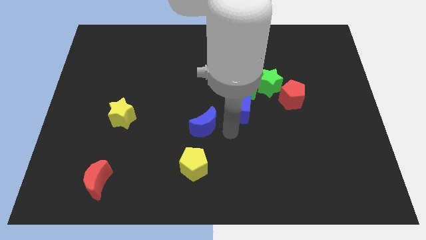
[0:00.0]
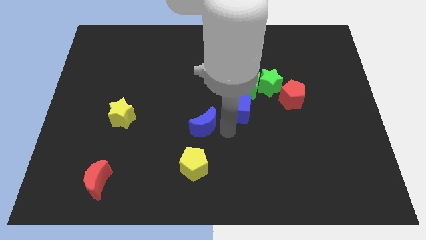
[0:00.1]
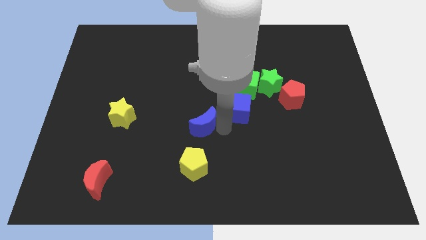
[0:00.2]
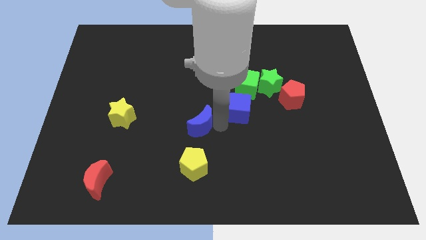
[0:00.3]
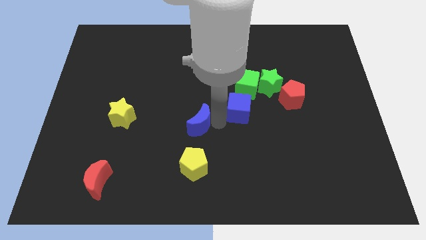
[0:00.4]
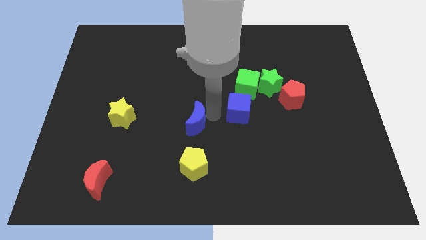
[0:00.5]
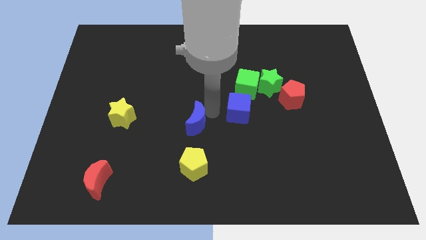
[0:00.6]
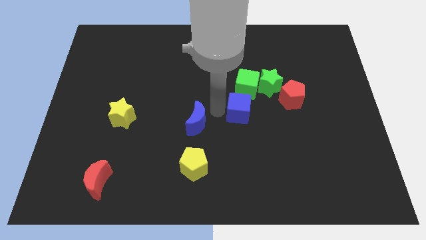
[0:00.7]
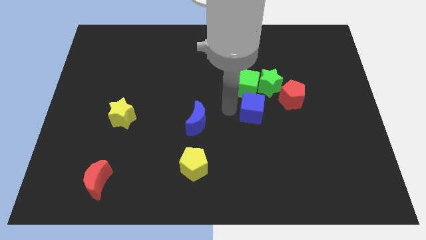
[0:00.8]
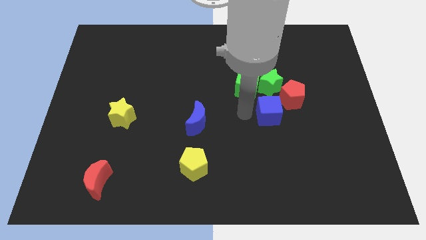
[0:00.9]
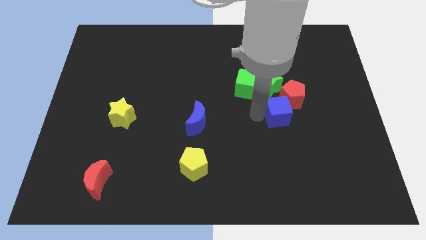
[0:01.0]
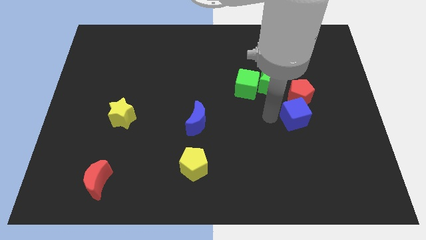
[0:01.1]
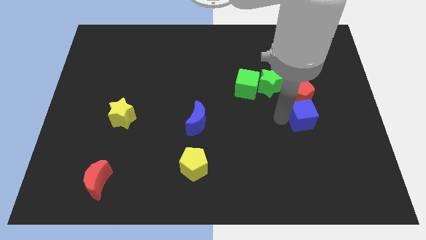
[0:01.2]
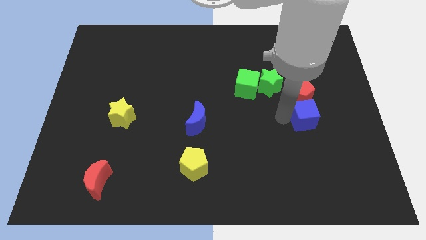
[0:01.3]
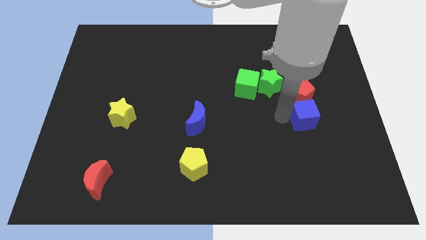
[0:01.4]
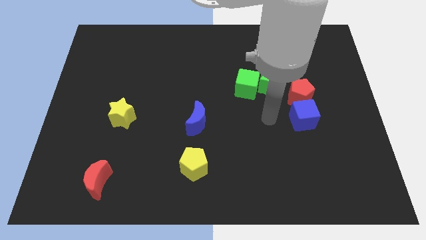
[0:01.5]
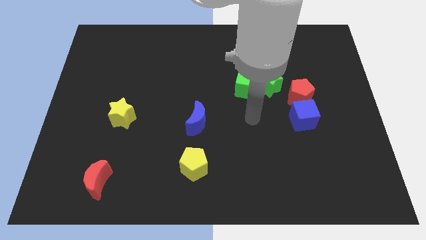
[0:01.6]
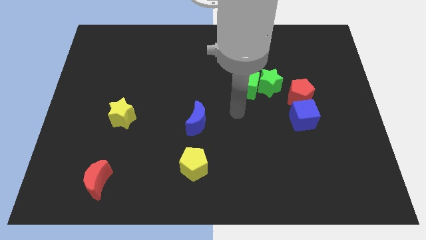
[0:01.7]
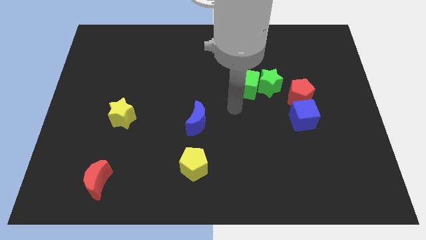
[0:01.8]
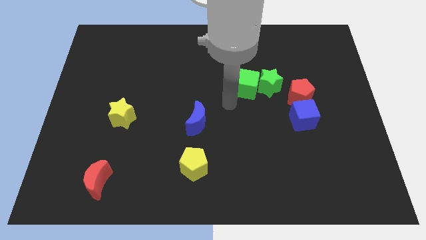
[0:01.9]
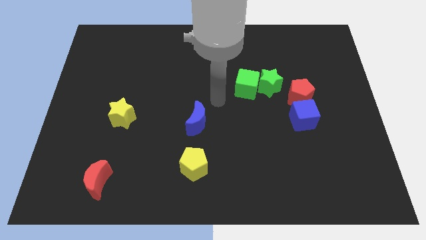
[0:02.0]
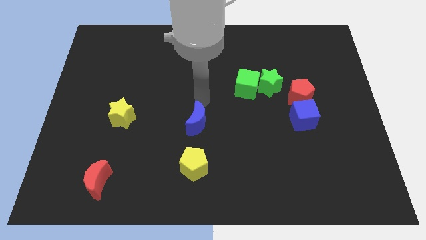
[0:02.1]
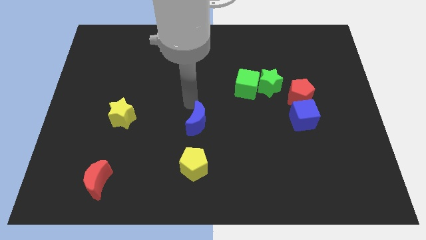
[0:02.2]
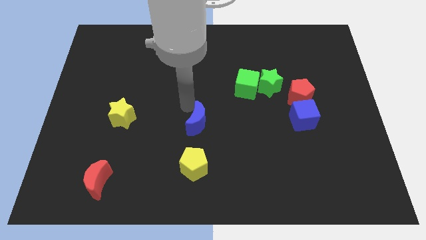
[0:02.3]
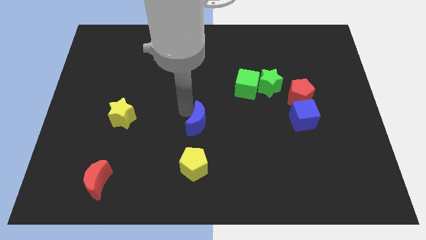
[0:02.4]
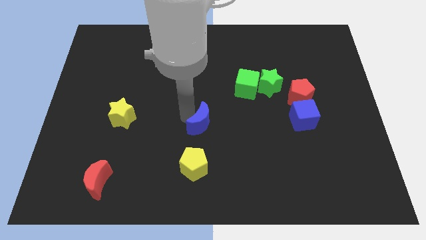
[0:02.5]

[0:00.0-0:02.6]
move the blue moon down to the red pentagon

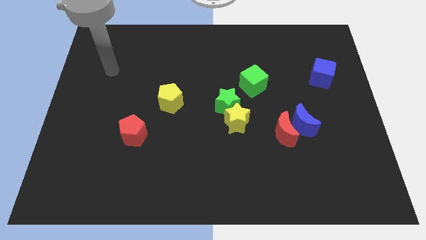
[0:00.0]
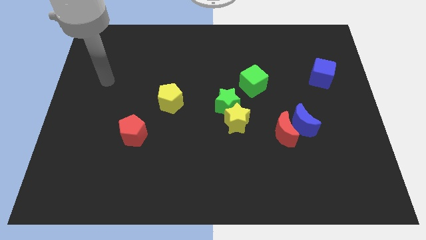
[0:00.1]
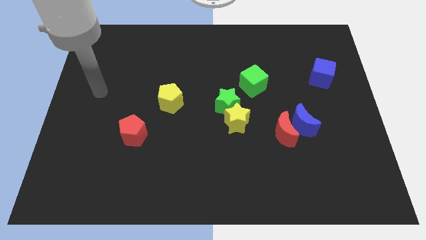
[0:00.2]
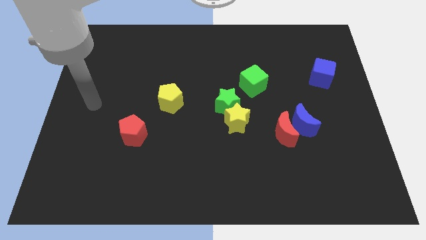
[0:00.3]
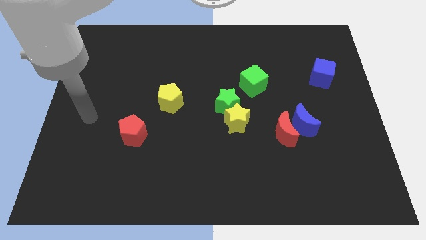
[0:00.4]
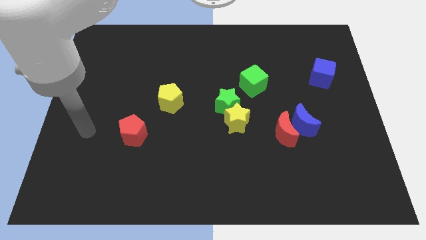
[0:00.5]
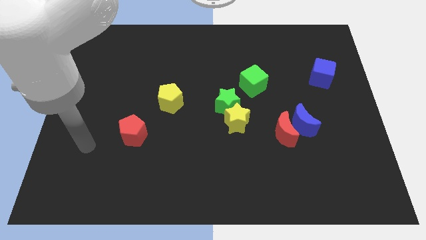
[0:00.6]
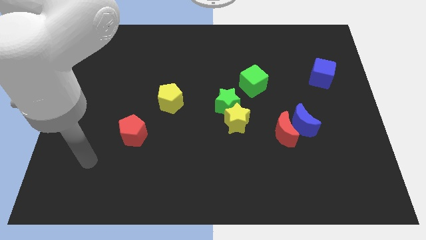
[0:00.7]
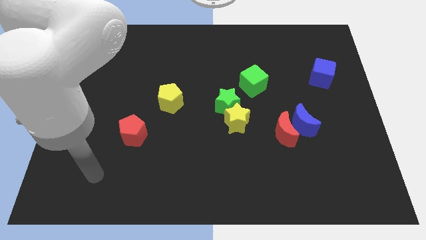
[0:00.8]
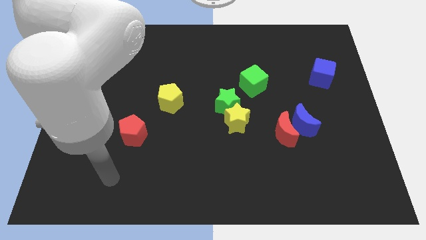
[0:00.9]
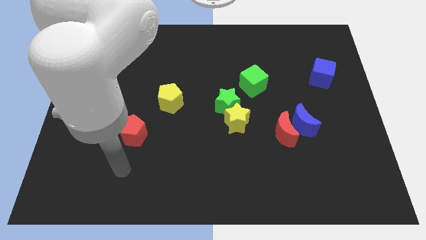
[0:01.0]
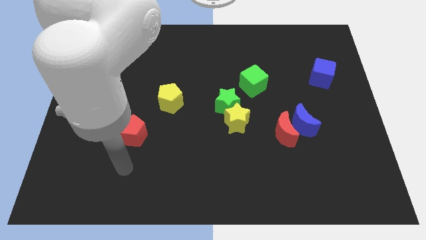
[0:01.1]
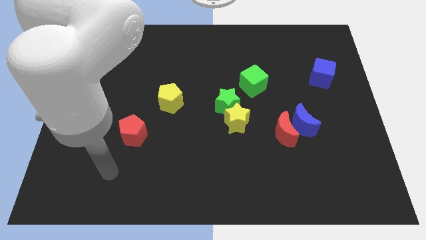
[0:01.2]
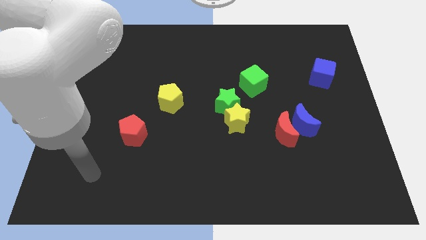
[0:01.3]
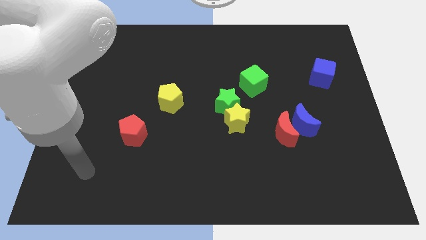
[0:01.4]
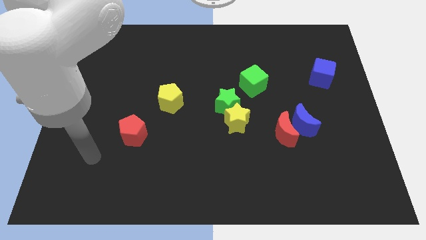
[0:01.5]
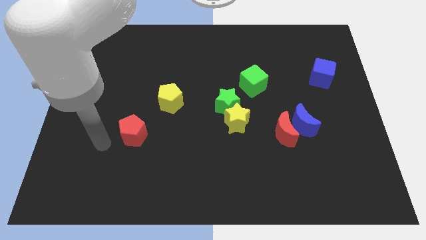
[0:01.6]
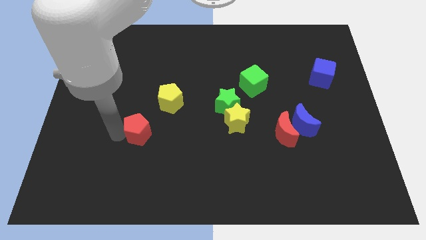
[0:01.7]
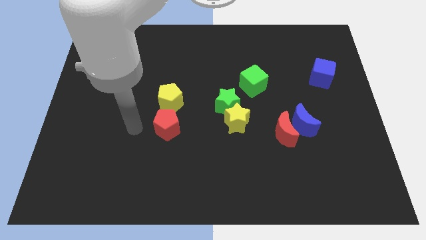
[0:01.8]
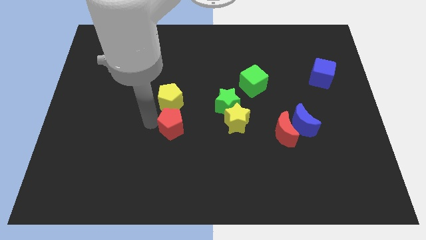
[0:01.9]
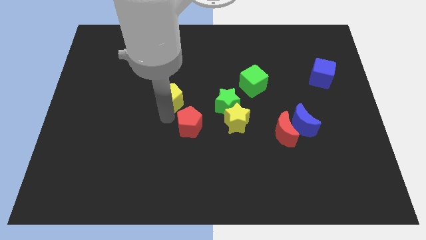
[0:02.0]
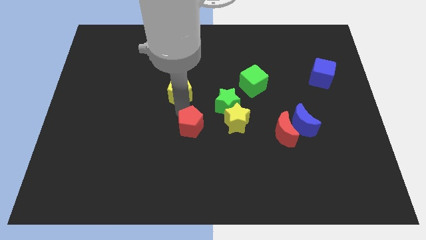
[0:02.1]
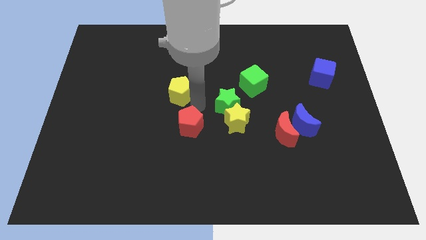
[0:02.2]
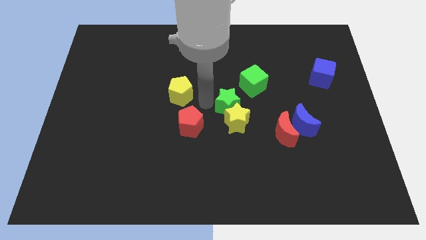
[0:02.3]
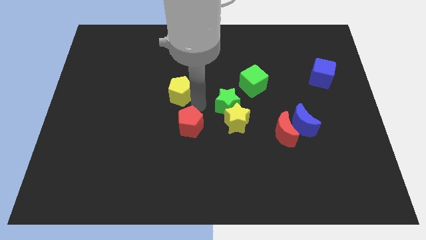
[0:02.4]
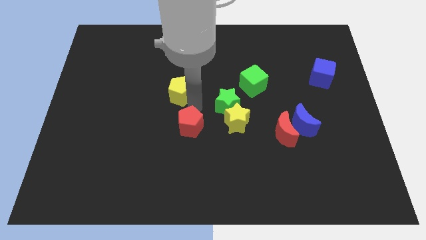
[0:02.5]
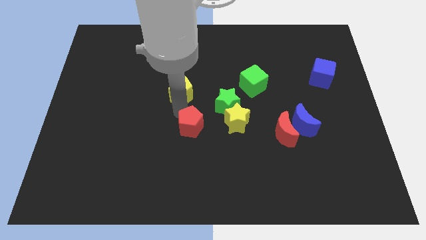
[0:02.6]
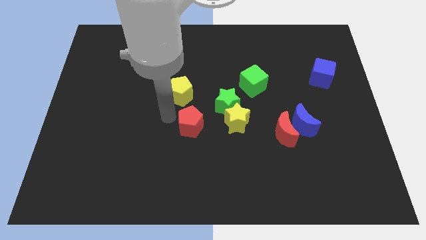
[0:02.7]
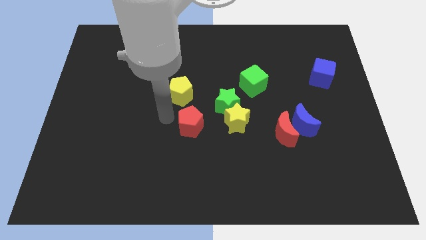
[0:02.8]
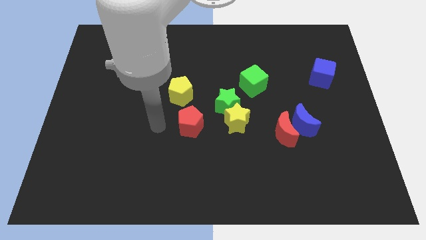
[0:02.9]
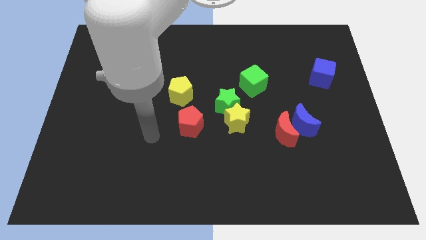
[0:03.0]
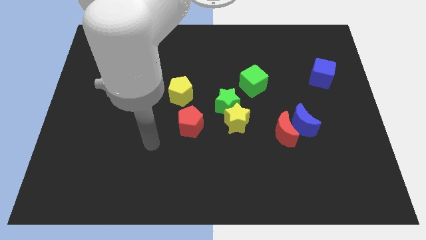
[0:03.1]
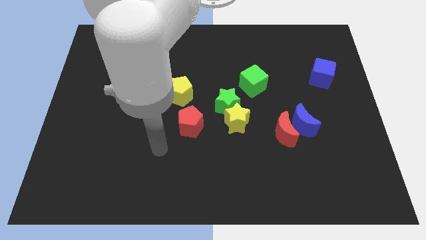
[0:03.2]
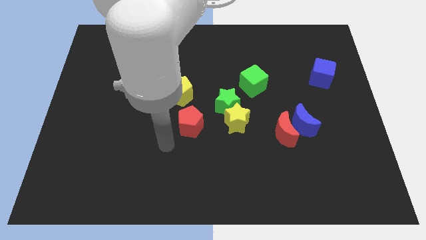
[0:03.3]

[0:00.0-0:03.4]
push the red pentagon to the left of the yellow star

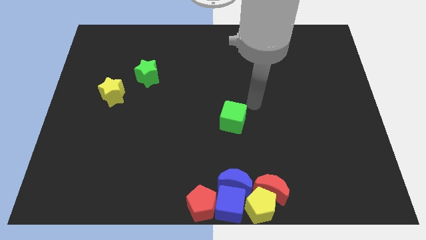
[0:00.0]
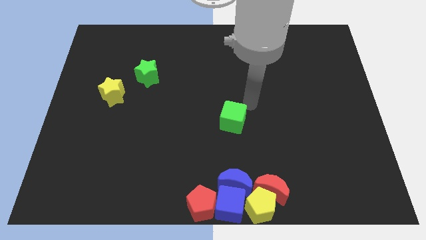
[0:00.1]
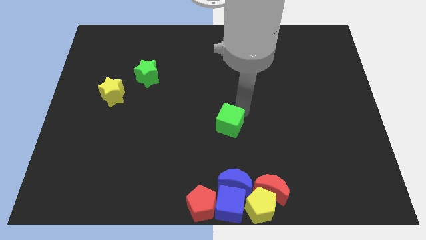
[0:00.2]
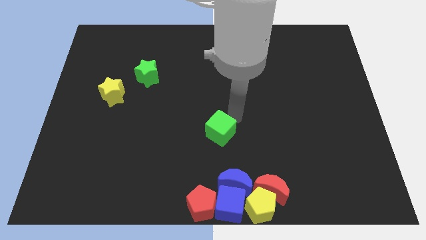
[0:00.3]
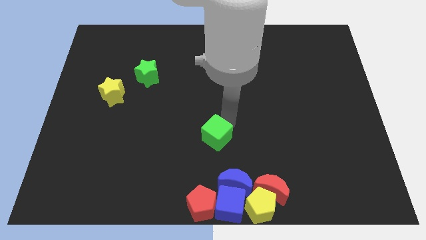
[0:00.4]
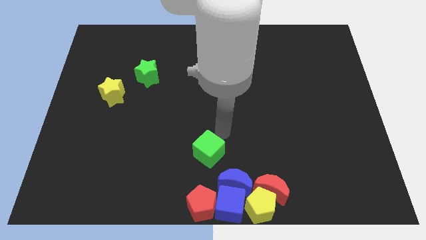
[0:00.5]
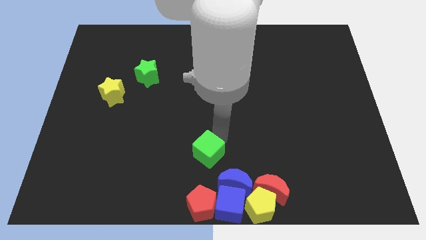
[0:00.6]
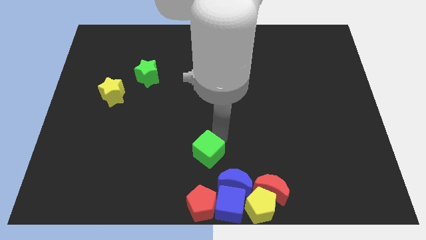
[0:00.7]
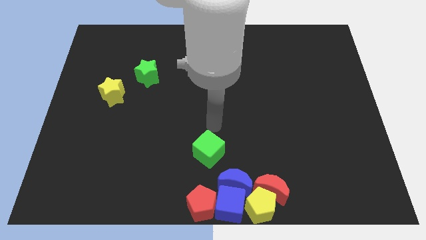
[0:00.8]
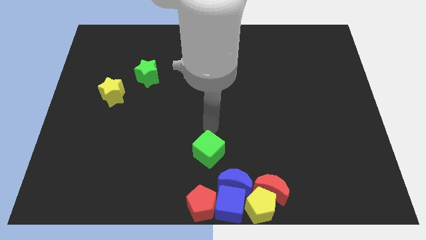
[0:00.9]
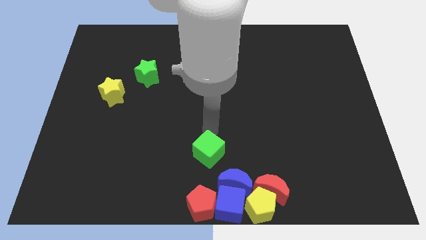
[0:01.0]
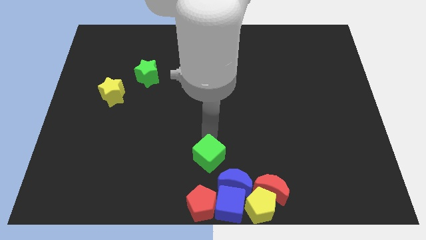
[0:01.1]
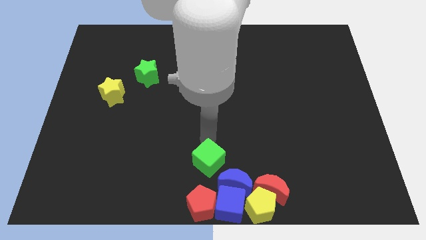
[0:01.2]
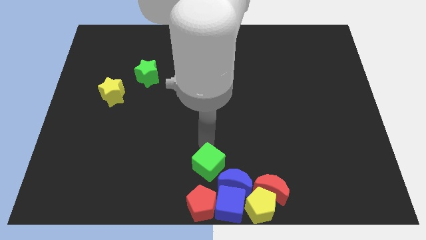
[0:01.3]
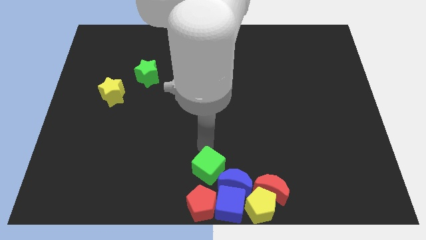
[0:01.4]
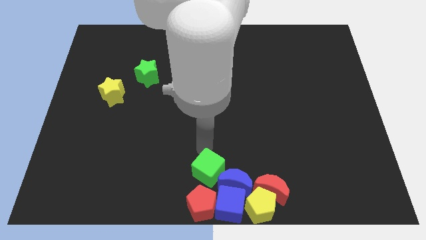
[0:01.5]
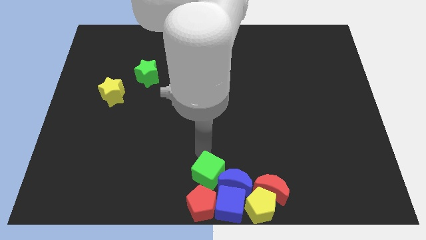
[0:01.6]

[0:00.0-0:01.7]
place the green cube above the red pentagon

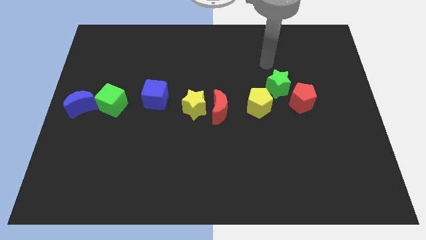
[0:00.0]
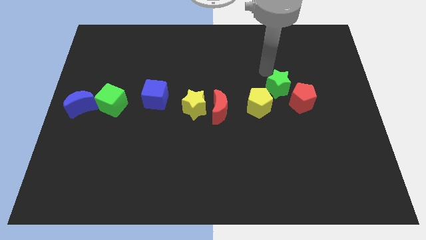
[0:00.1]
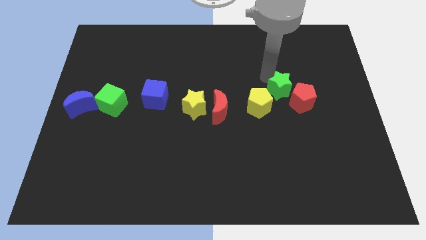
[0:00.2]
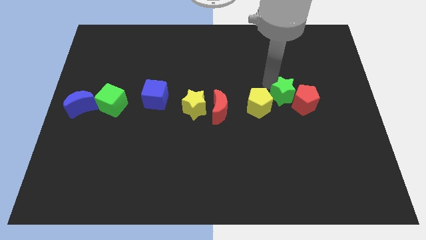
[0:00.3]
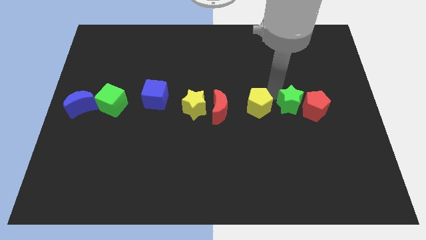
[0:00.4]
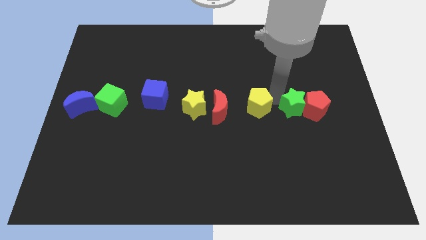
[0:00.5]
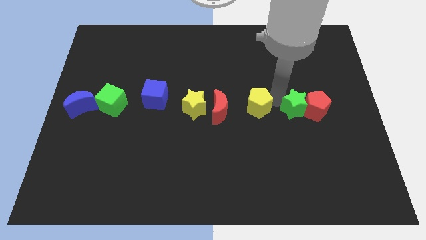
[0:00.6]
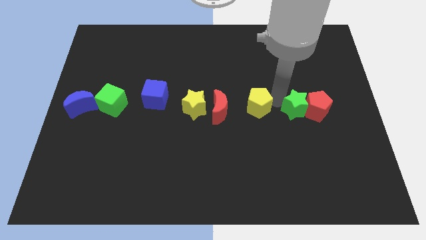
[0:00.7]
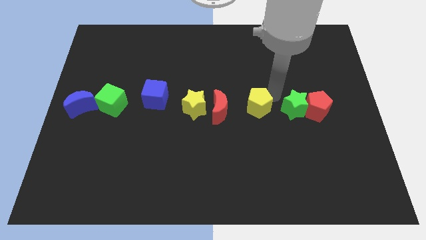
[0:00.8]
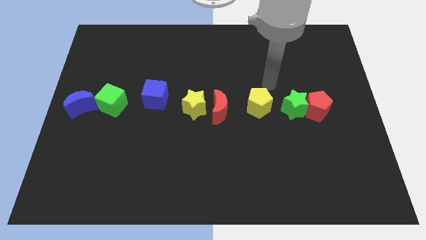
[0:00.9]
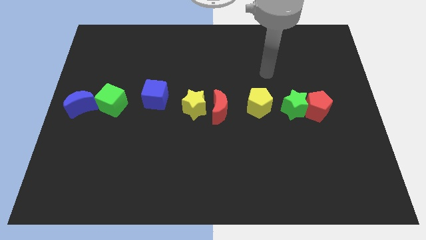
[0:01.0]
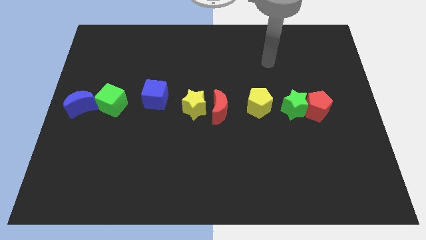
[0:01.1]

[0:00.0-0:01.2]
place the green star to the right of the yellow pentagon

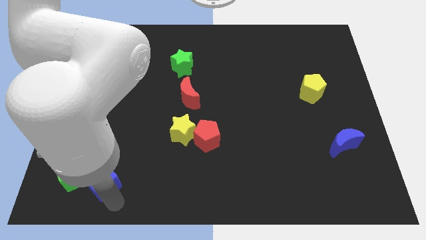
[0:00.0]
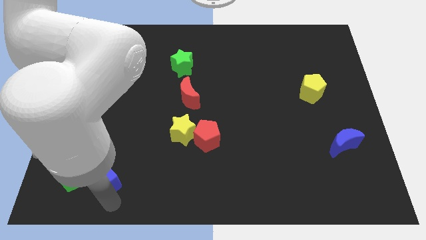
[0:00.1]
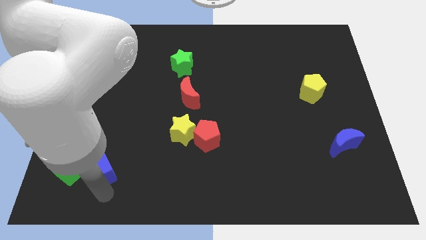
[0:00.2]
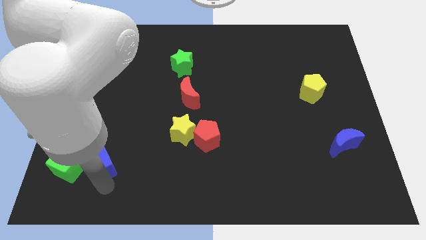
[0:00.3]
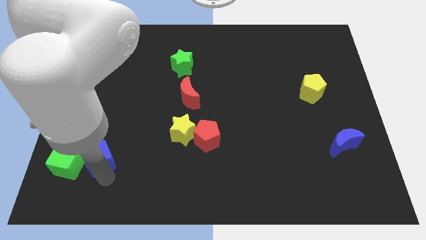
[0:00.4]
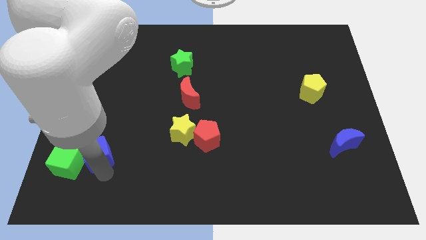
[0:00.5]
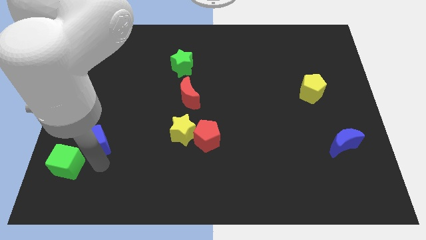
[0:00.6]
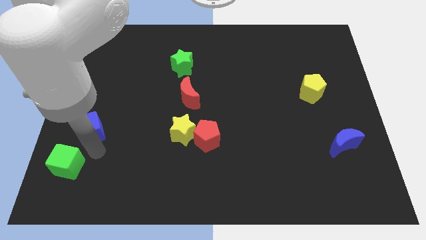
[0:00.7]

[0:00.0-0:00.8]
separate blue cube from green cube
